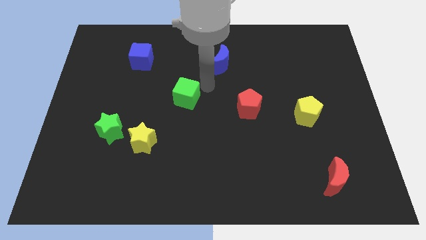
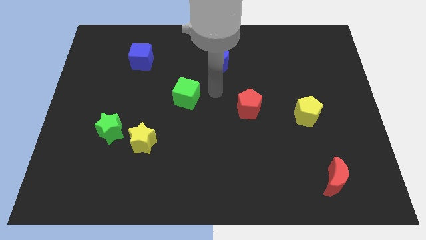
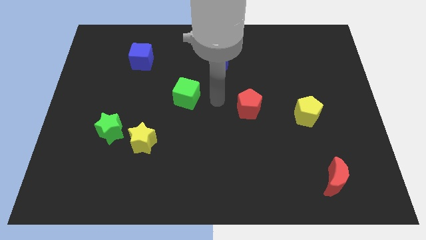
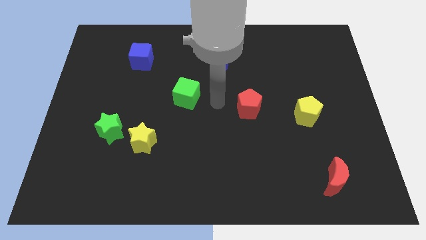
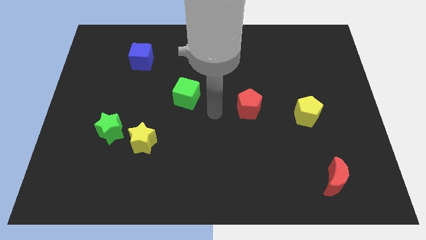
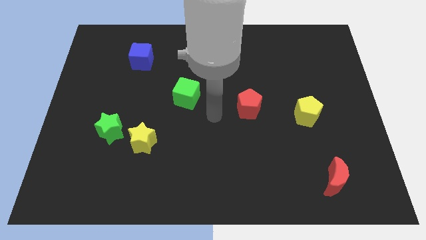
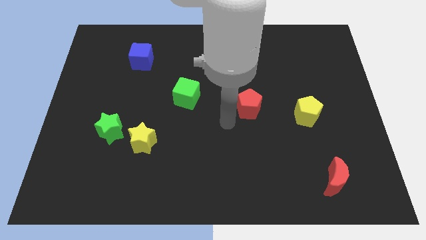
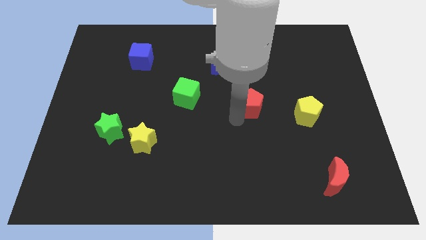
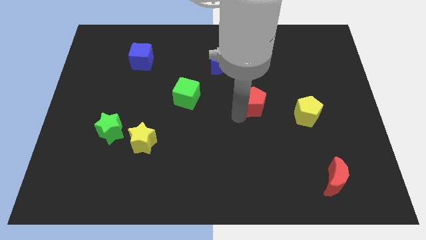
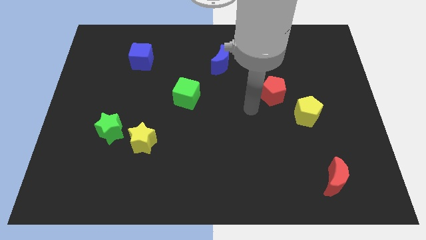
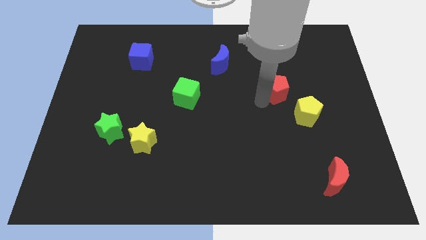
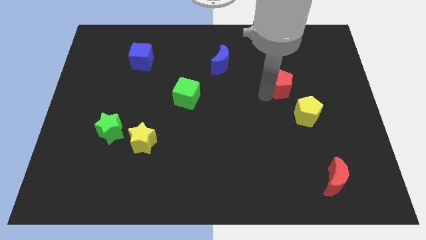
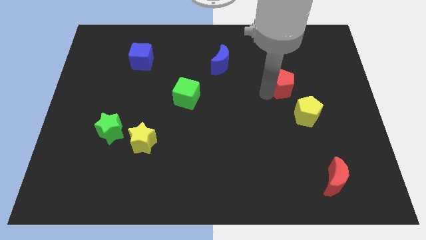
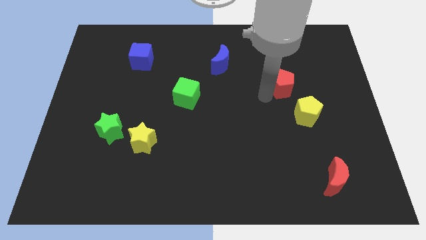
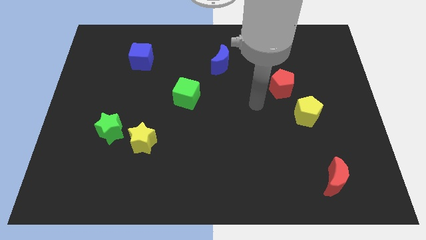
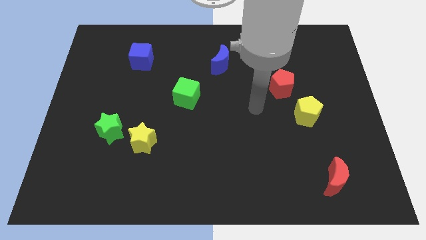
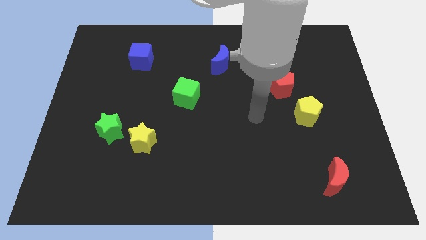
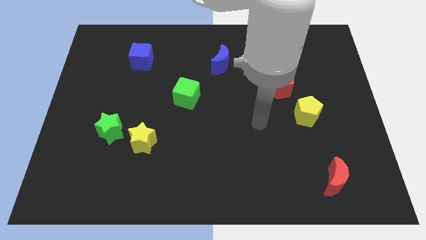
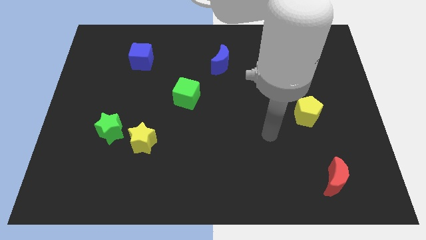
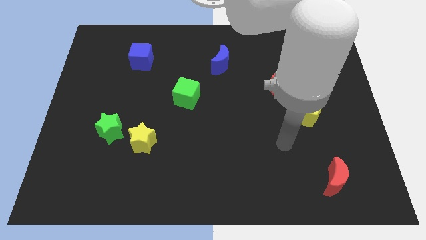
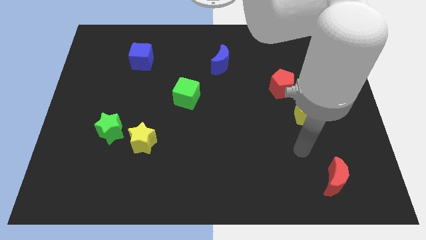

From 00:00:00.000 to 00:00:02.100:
move red pentagon slightly up

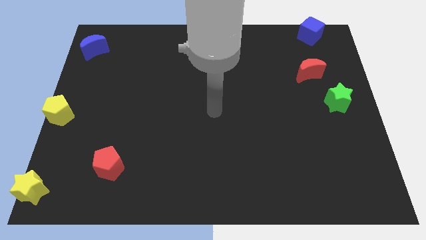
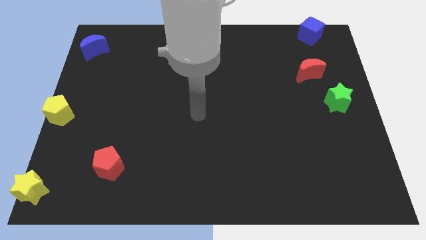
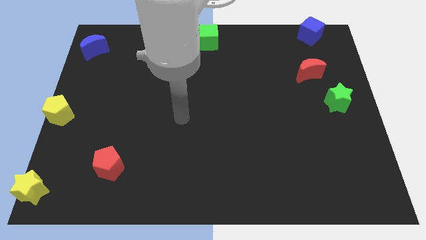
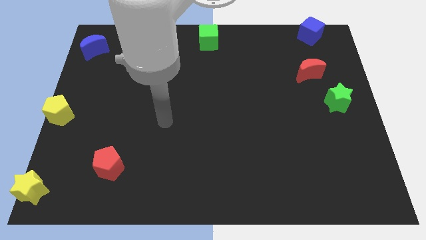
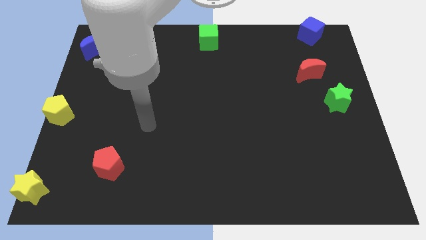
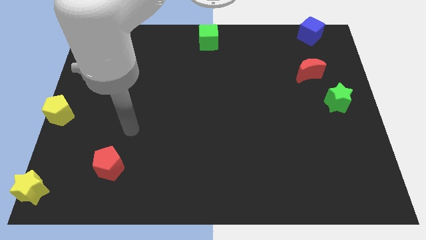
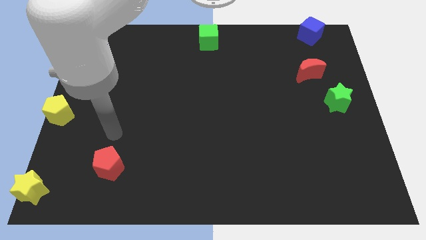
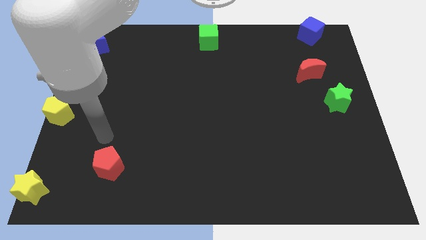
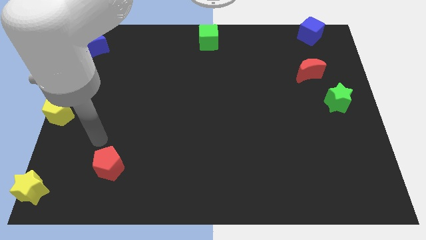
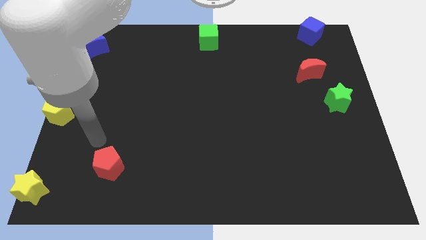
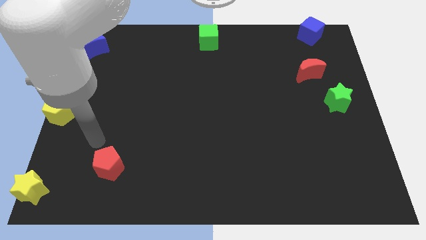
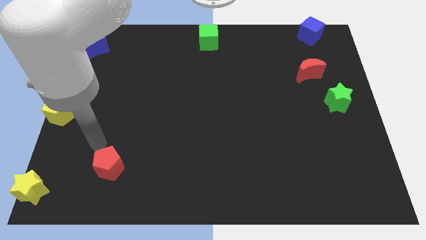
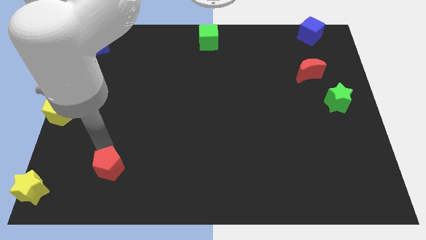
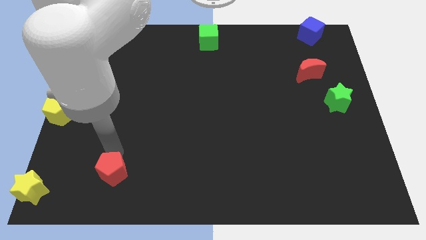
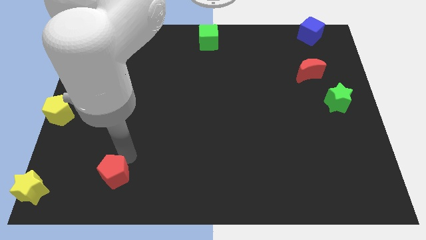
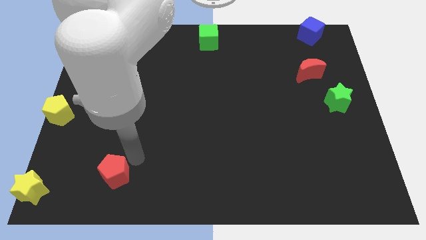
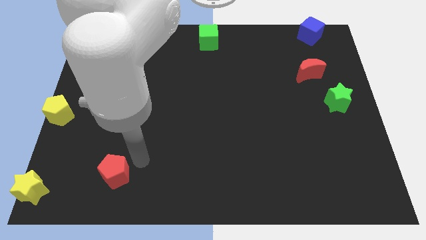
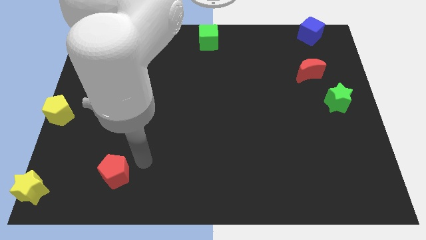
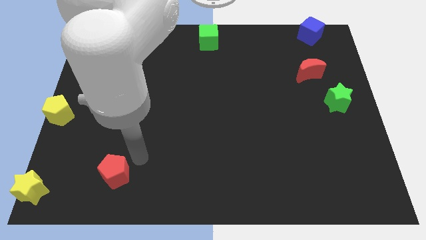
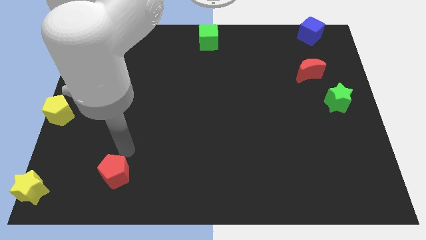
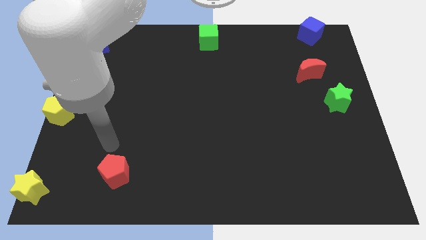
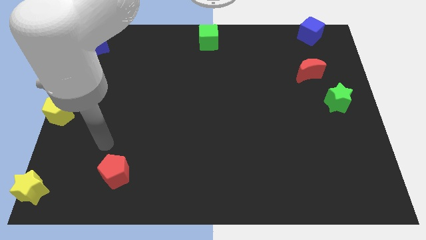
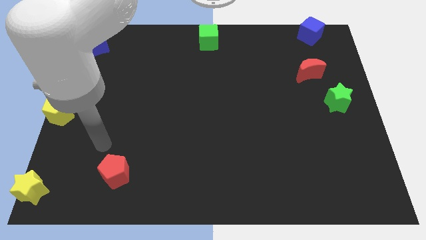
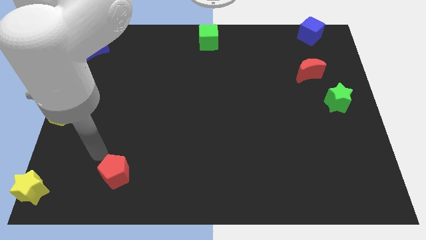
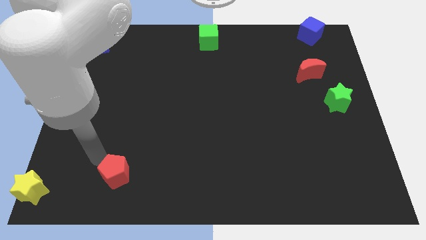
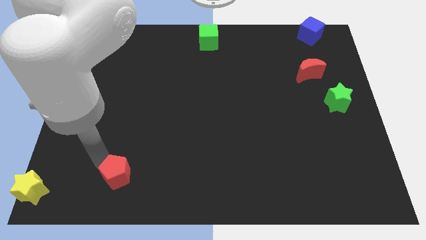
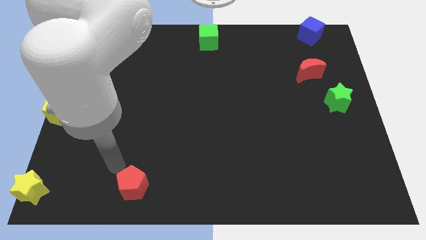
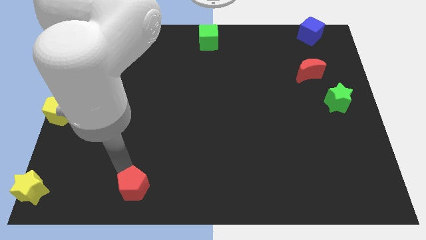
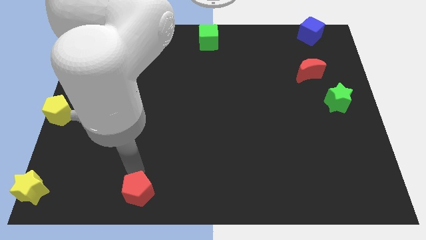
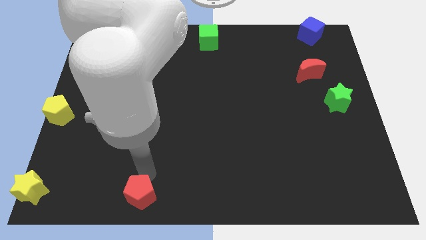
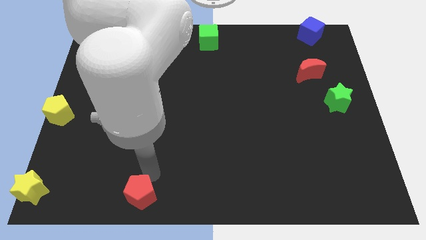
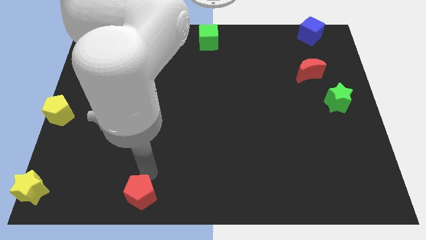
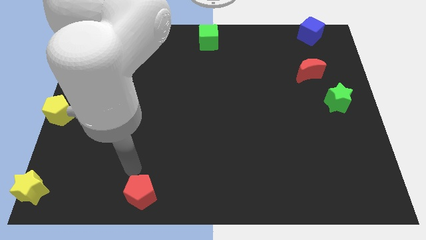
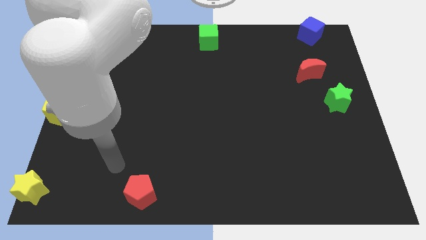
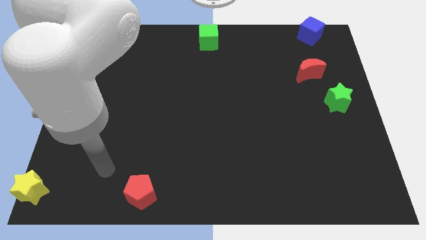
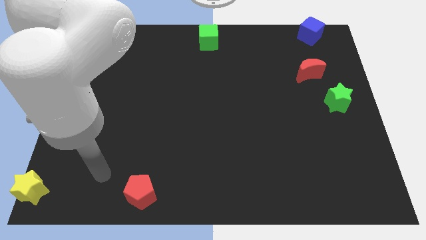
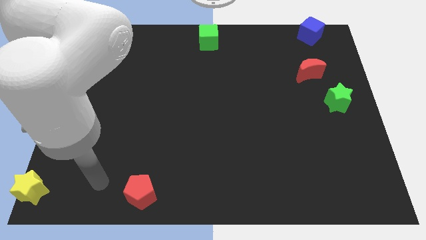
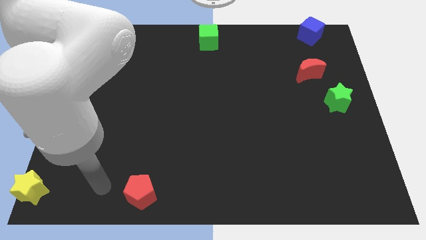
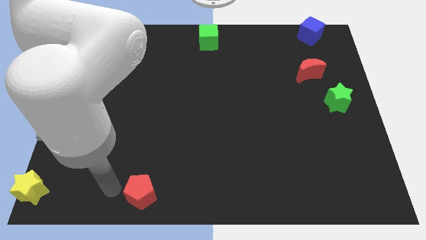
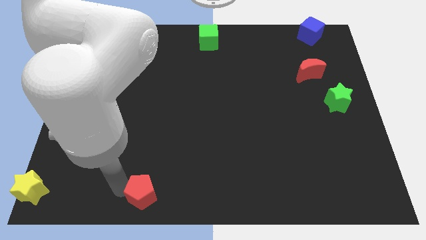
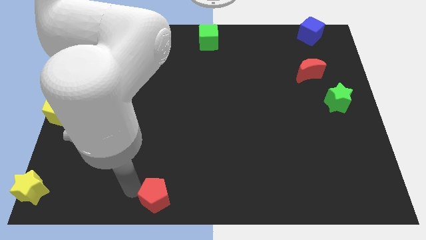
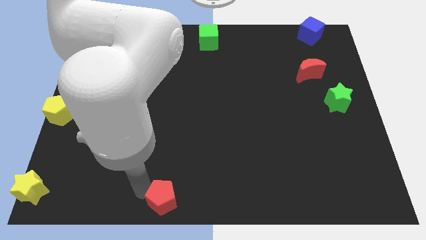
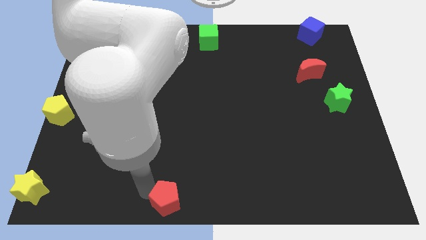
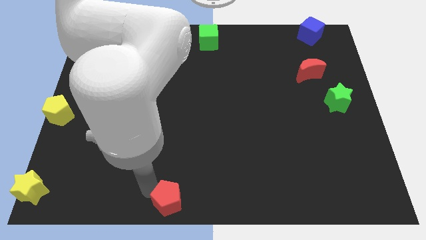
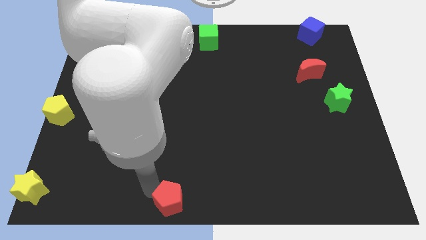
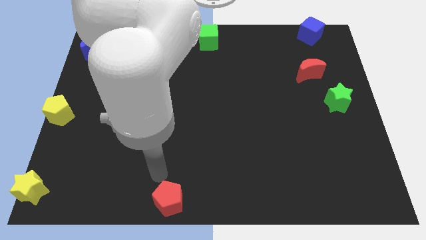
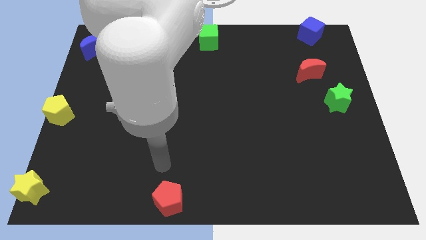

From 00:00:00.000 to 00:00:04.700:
move the red pentagon towards the bottom center

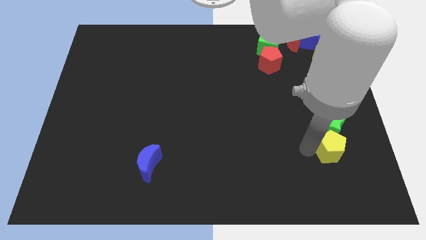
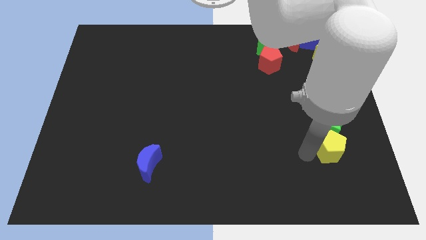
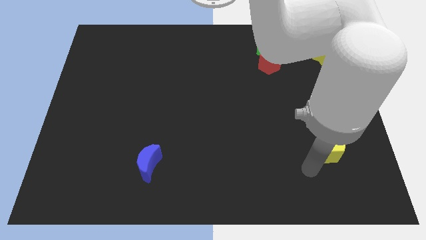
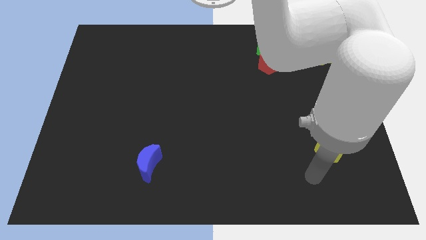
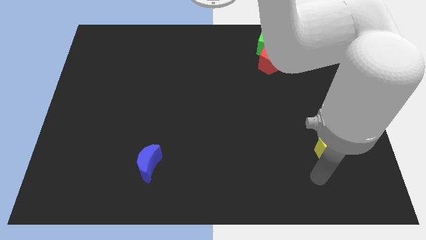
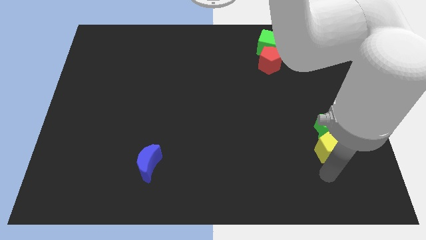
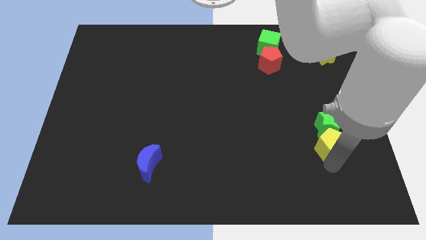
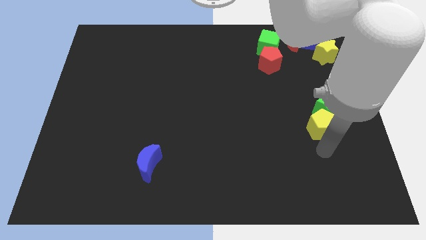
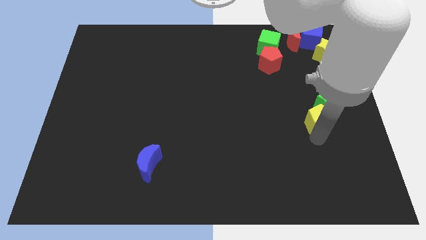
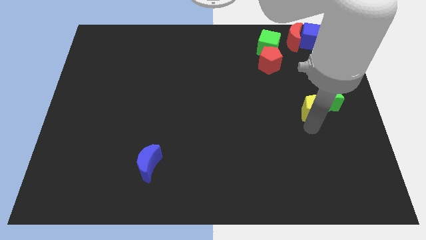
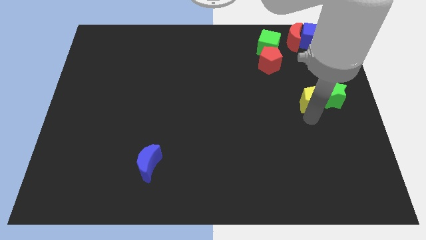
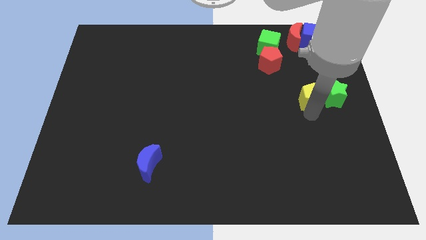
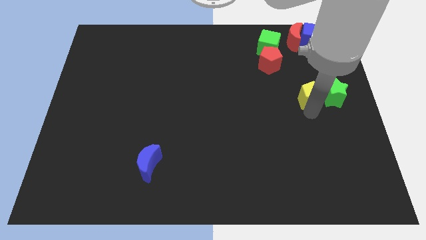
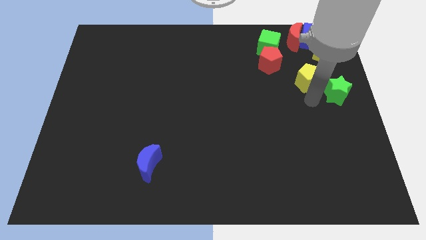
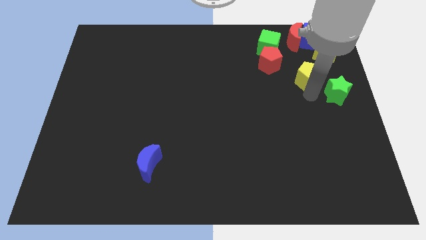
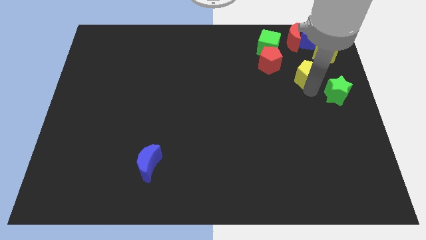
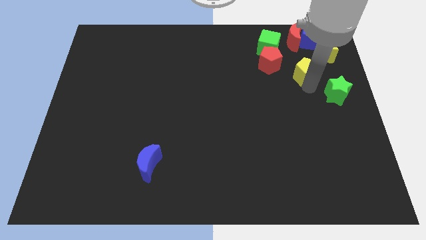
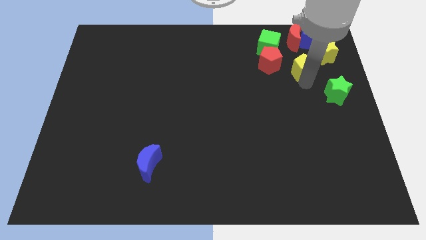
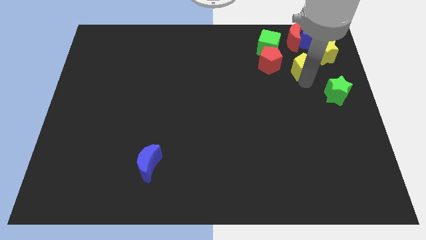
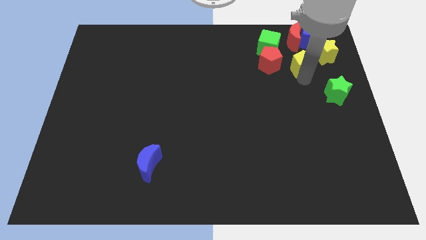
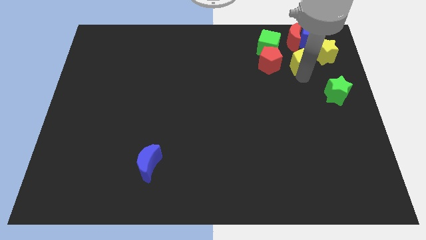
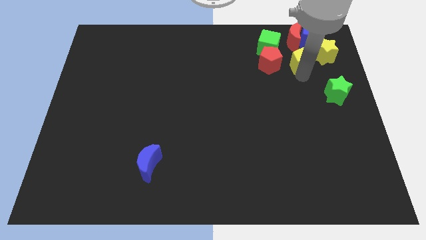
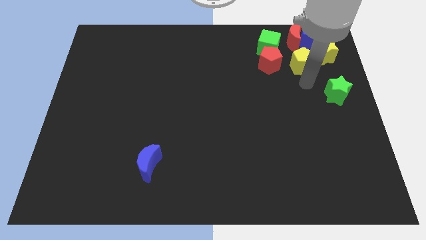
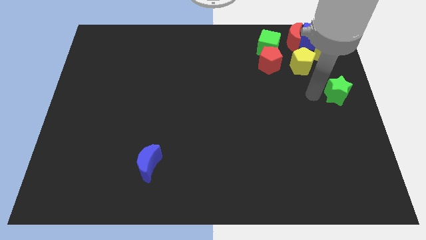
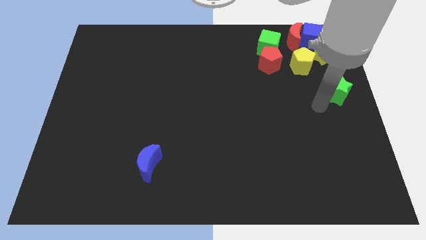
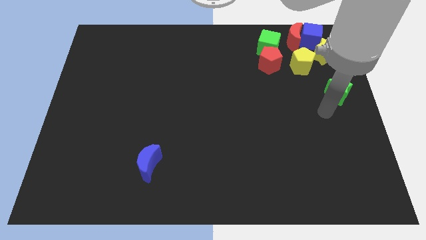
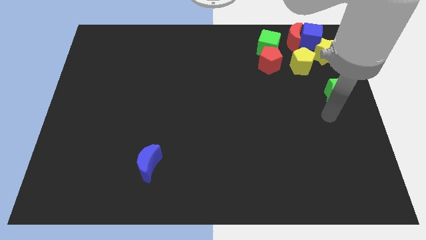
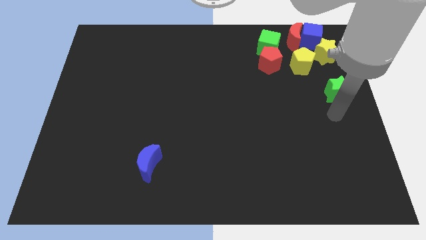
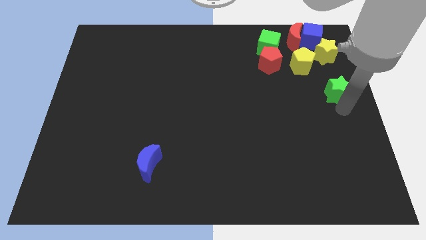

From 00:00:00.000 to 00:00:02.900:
move yellow pentagon below the red moon
